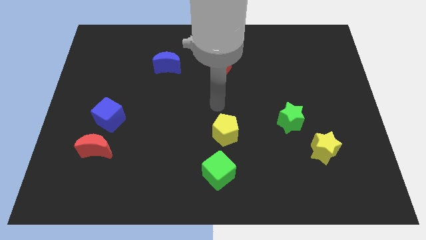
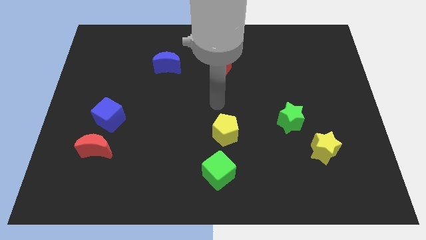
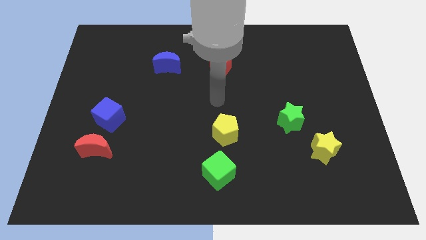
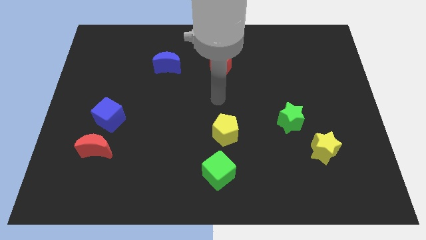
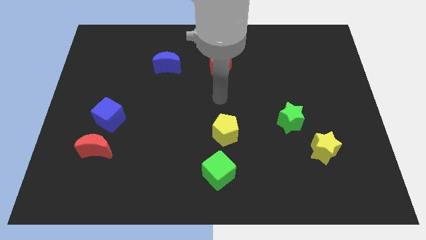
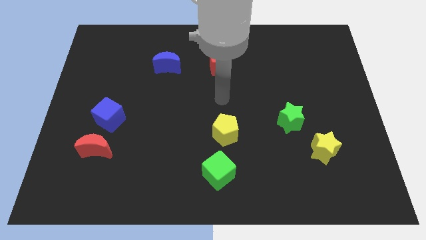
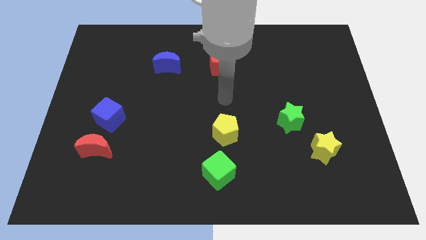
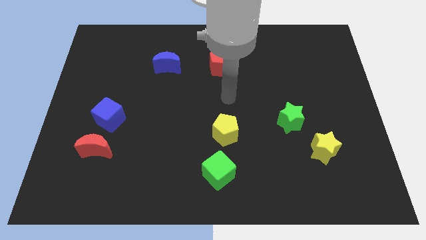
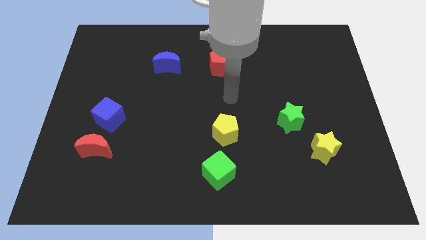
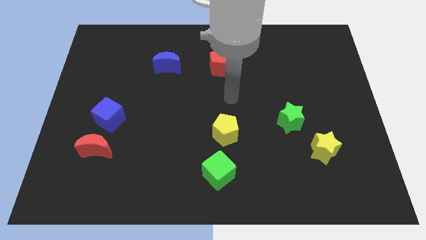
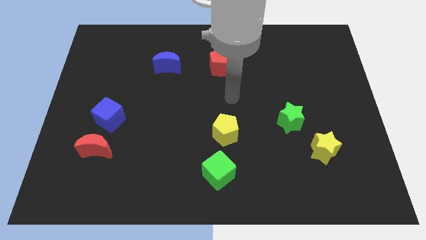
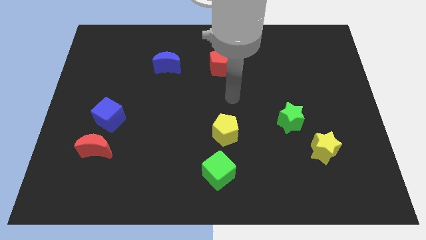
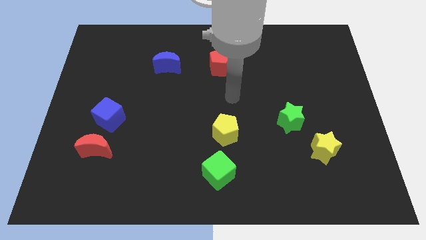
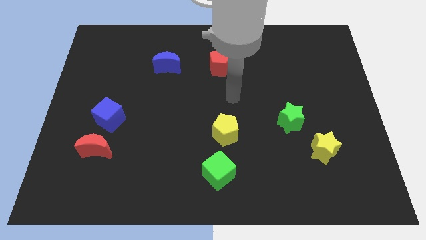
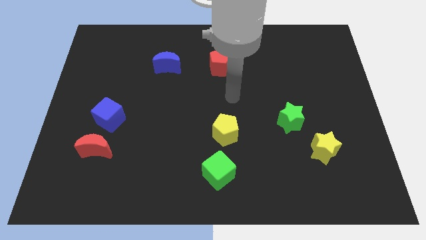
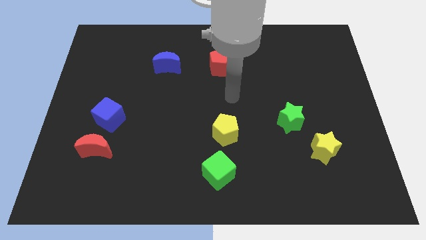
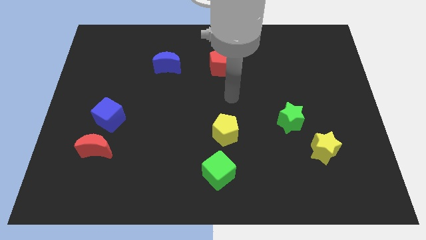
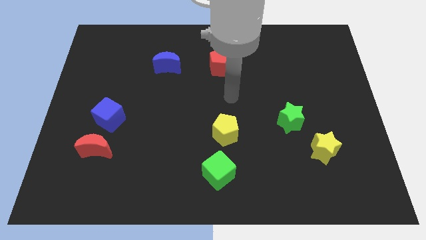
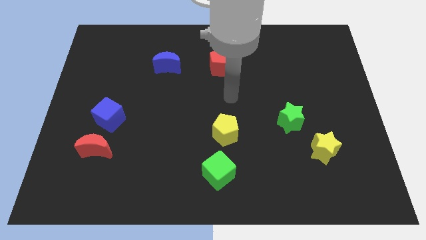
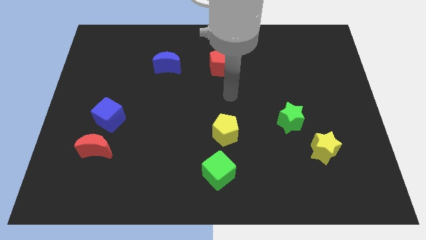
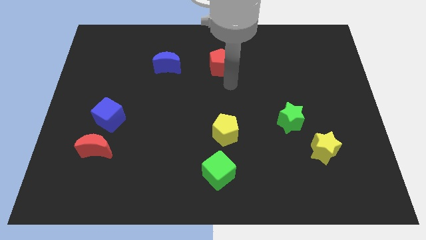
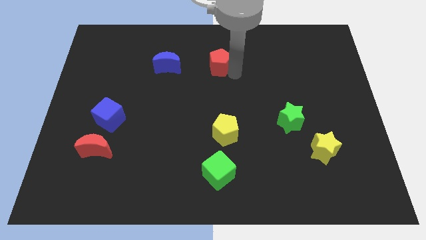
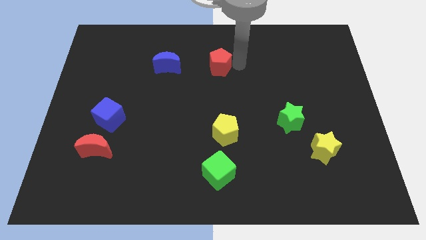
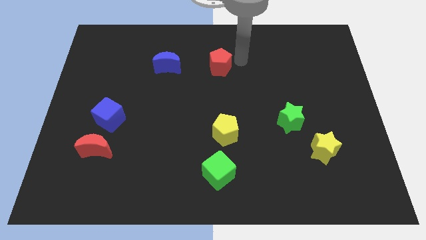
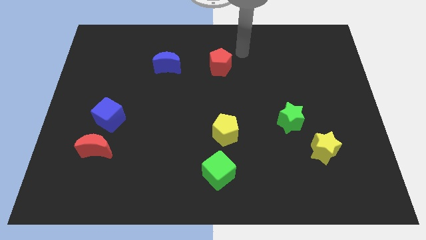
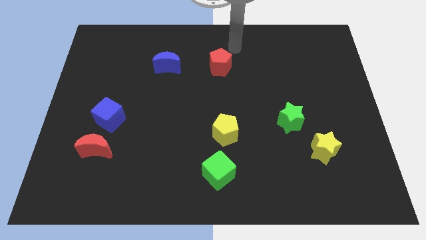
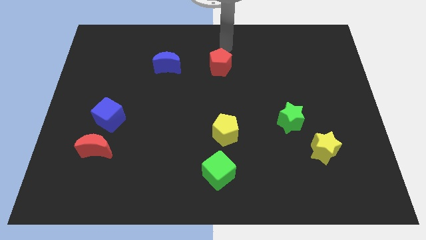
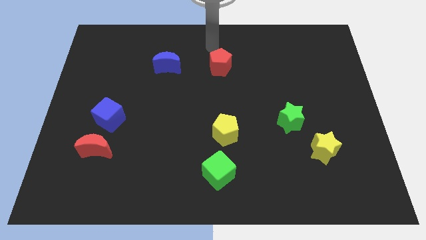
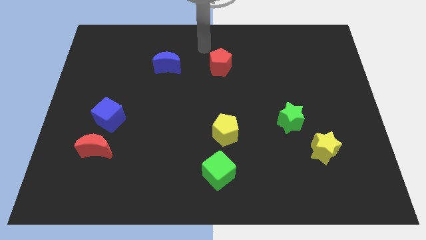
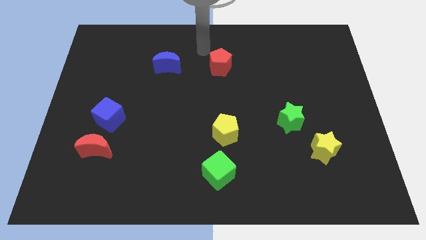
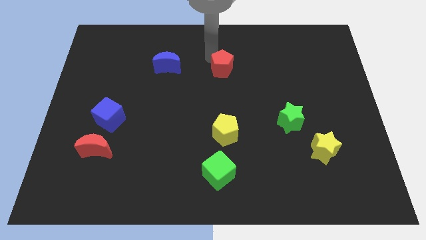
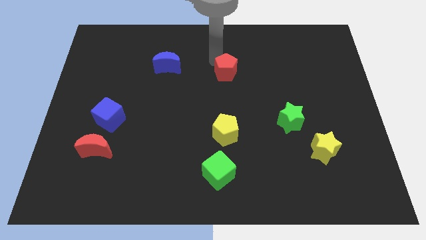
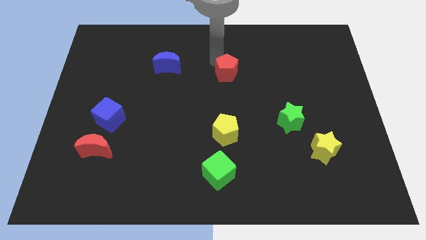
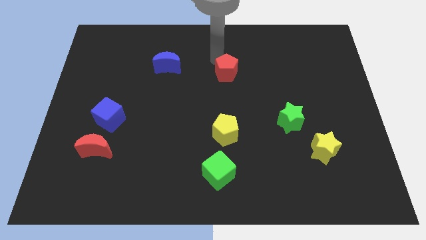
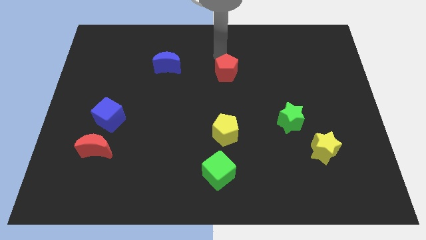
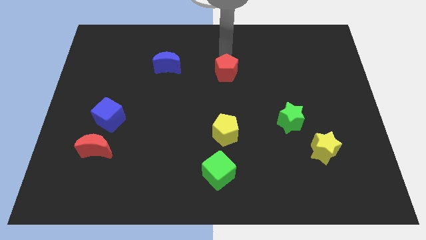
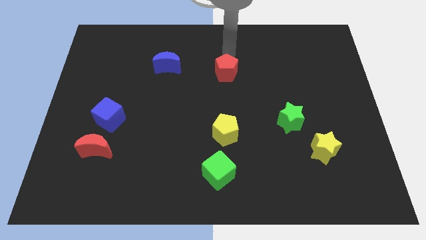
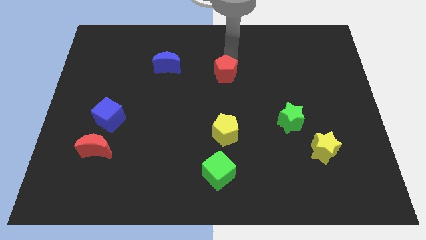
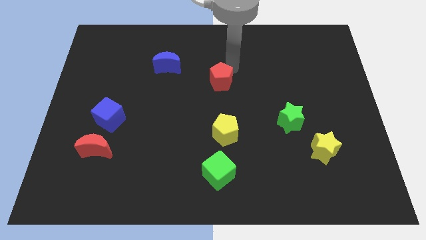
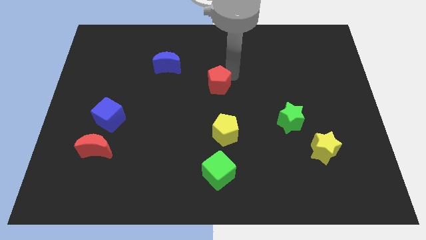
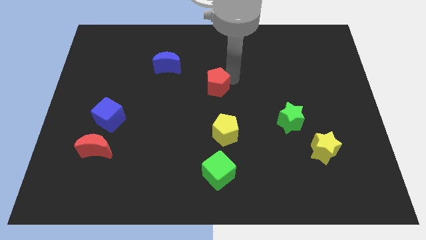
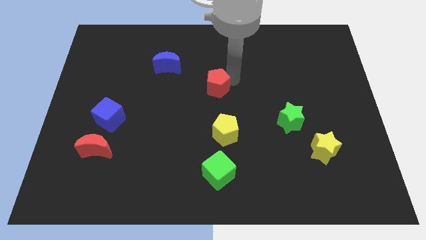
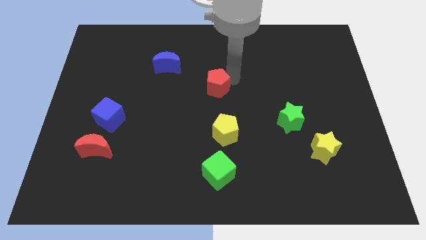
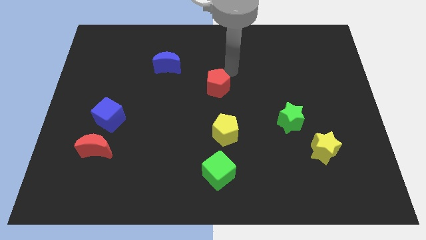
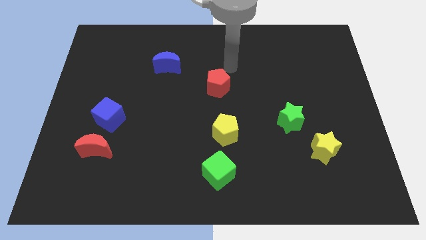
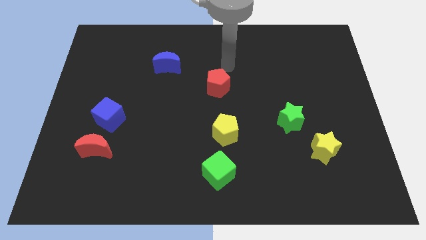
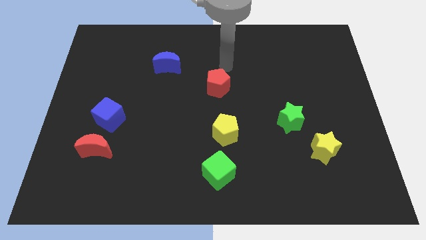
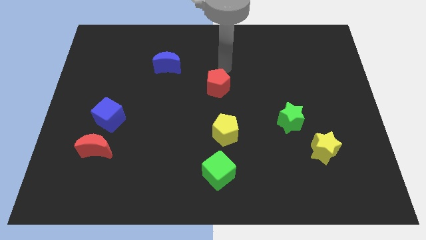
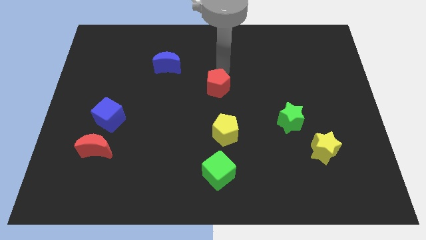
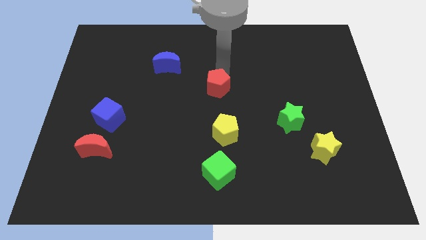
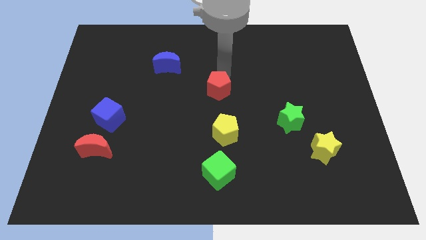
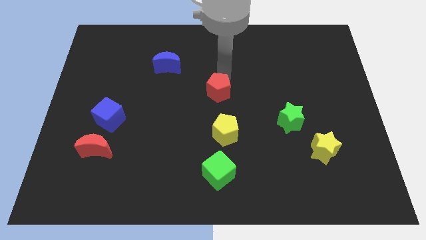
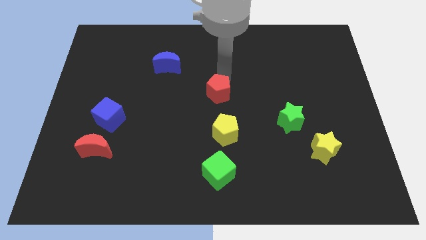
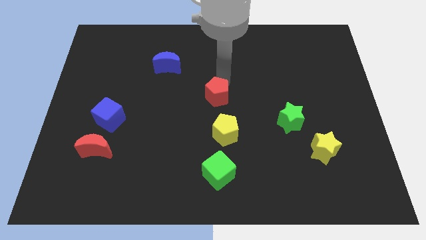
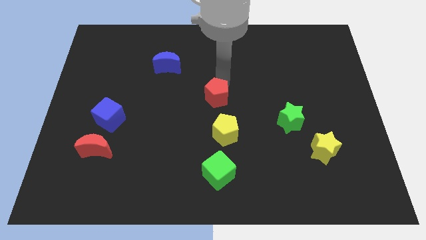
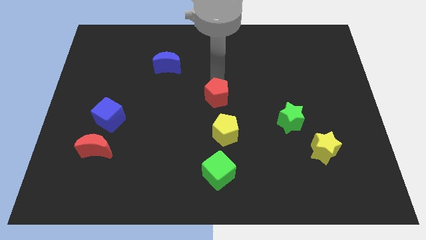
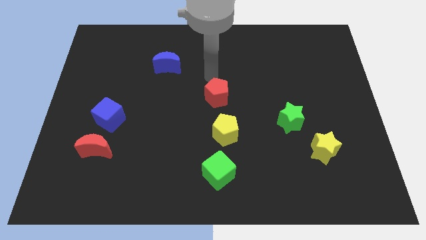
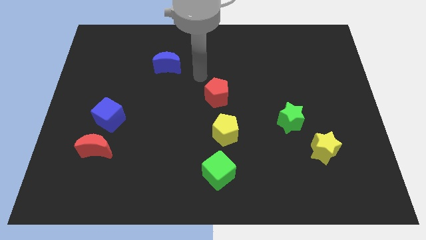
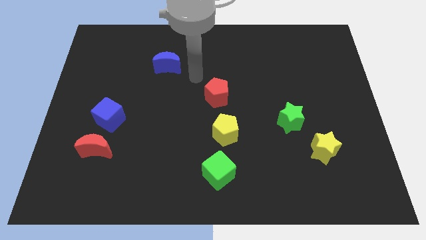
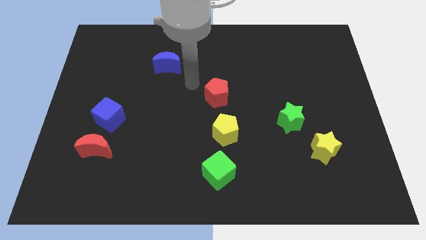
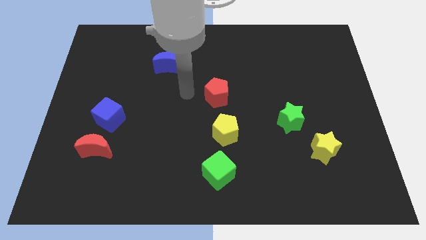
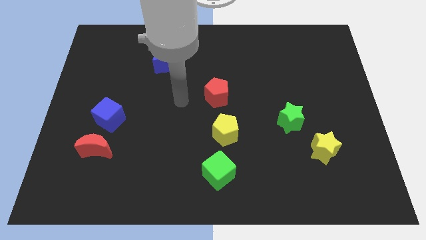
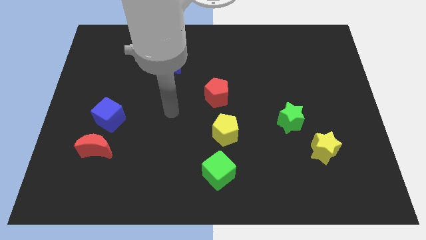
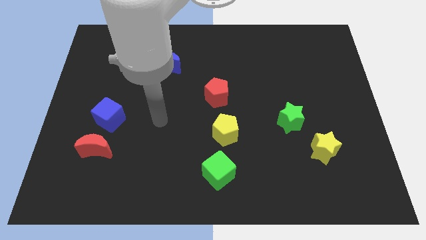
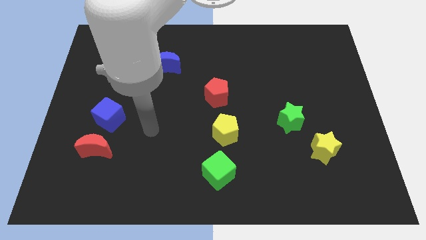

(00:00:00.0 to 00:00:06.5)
move the red pentagon towards the center

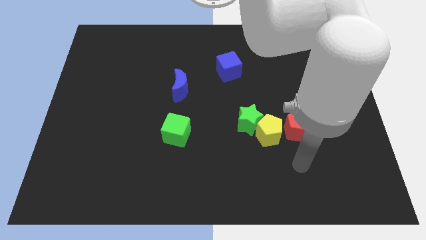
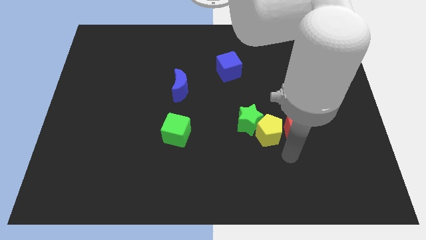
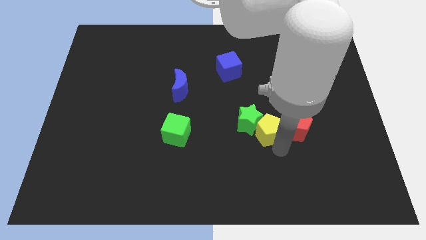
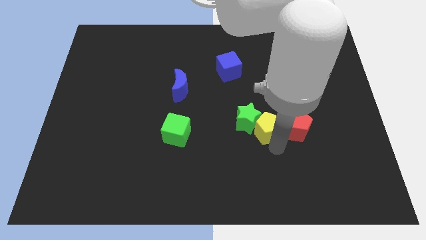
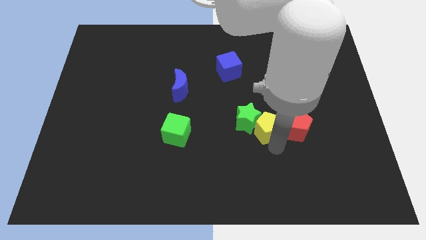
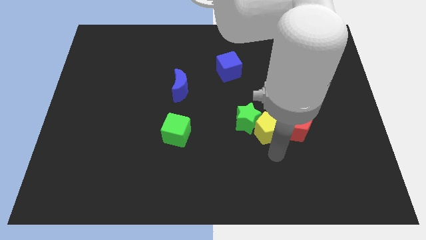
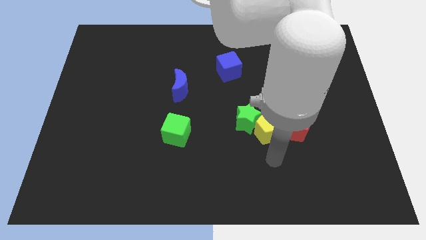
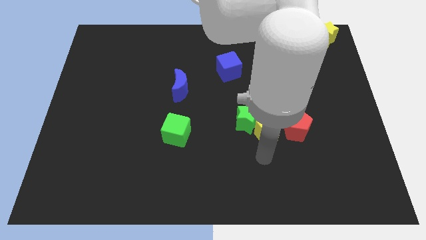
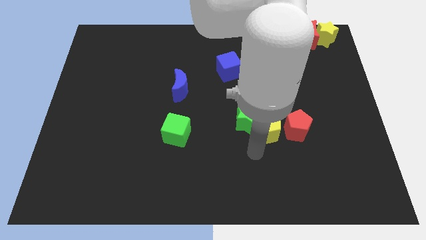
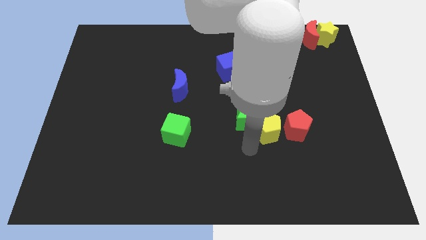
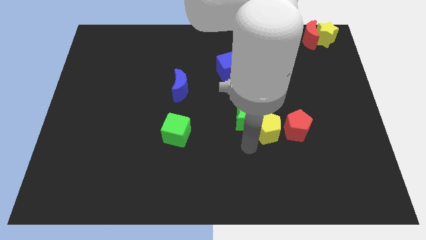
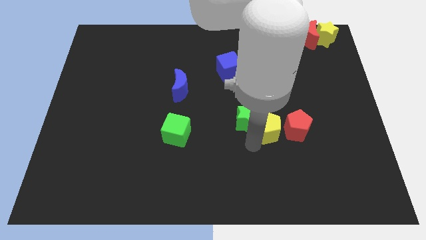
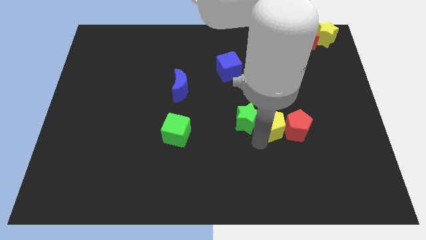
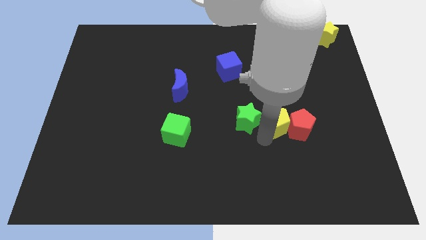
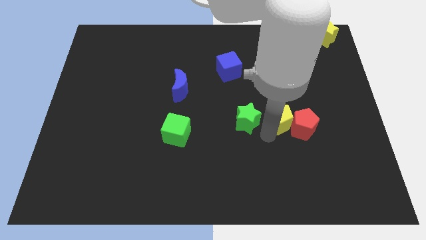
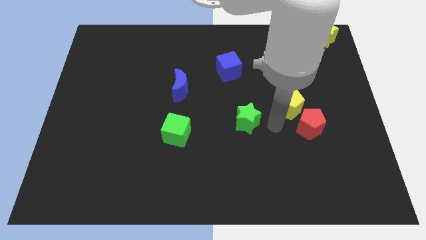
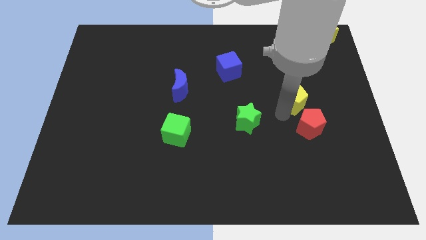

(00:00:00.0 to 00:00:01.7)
push yellow pentagon slightly upwards

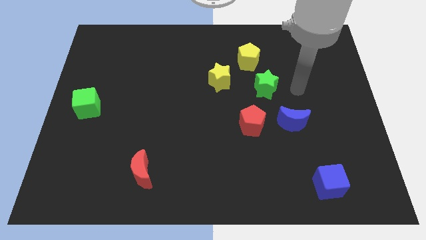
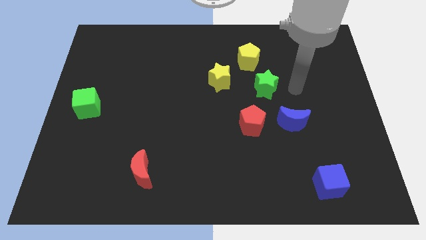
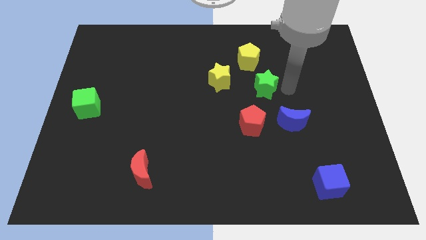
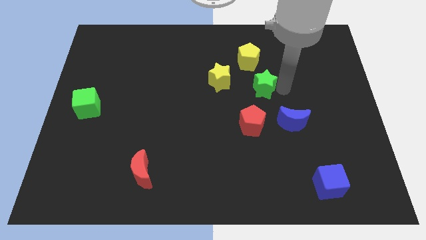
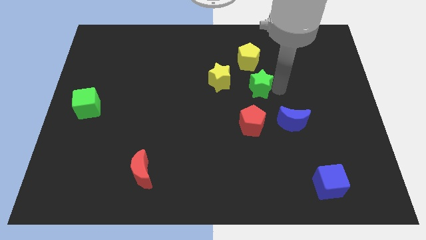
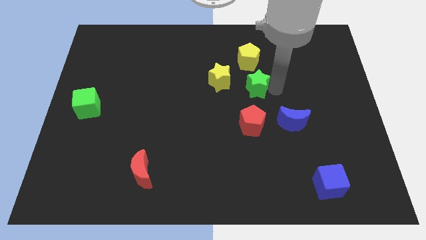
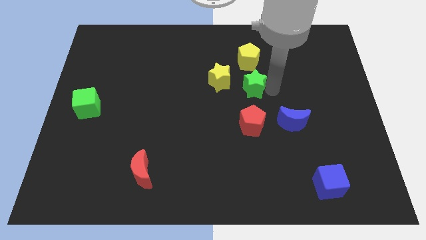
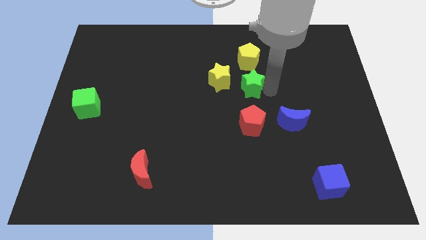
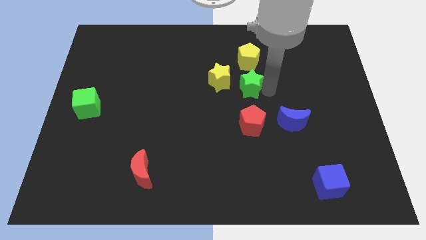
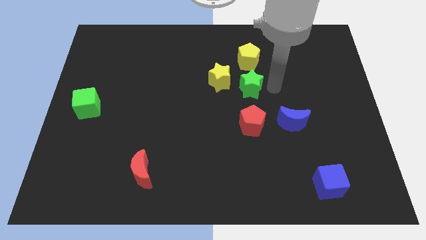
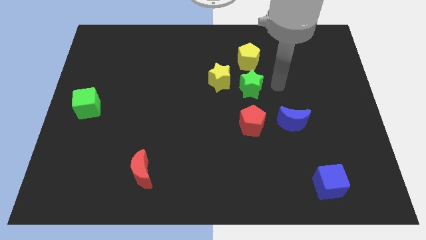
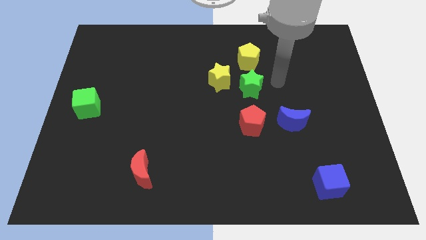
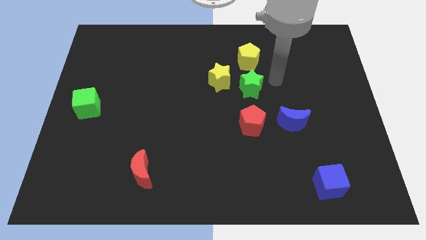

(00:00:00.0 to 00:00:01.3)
place the green star in between the yellow pentagon and the red pentagon to form a vertical line
